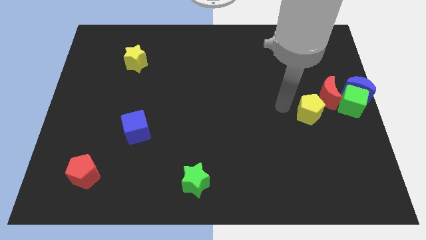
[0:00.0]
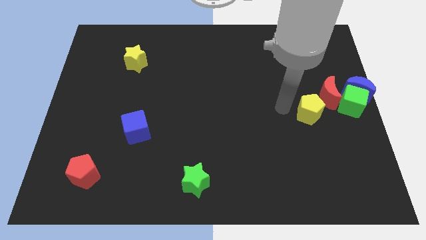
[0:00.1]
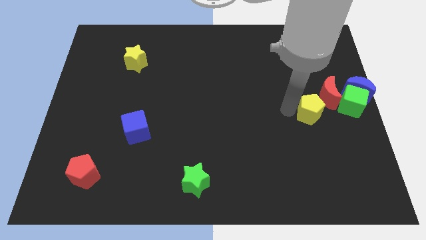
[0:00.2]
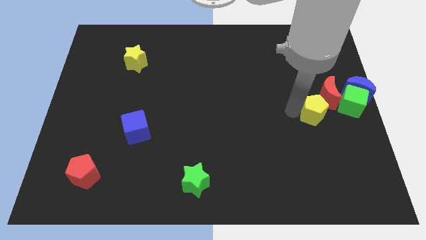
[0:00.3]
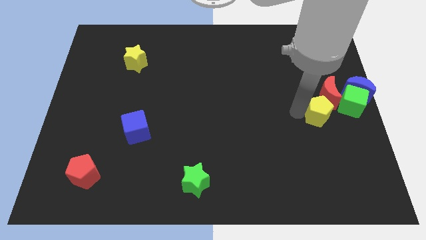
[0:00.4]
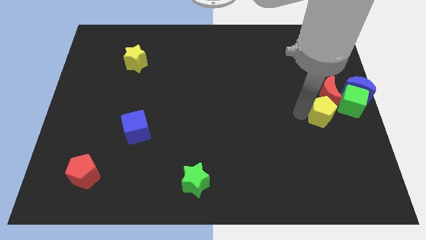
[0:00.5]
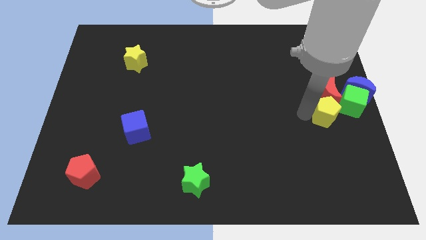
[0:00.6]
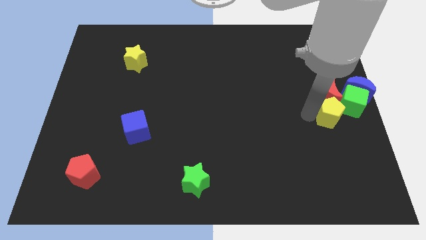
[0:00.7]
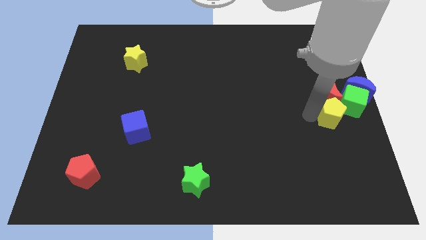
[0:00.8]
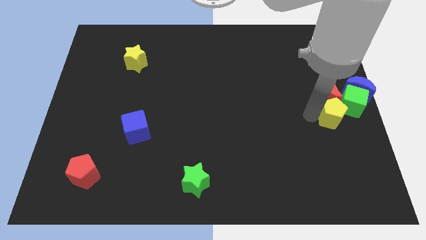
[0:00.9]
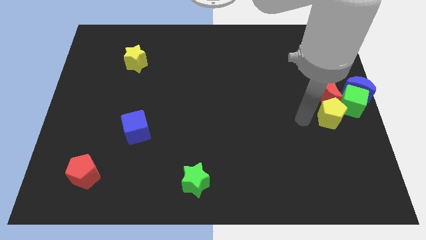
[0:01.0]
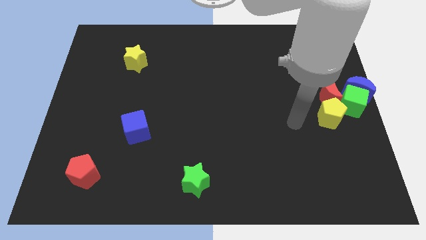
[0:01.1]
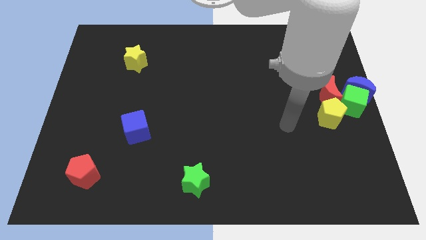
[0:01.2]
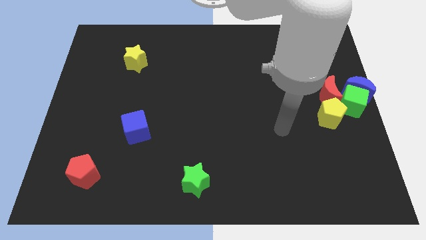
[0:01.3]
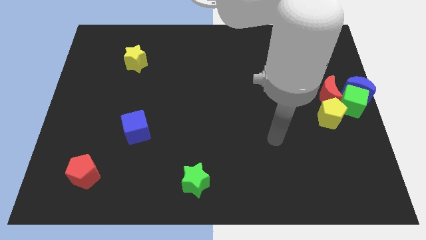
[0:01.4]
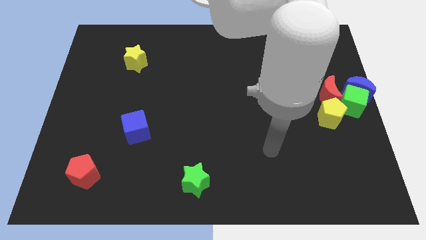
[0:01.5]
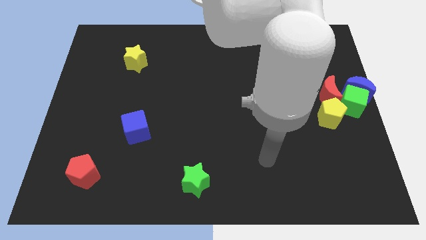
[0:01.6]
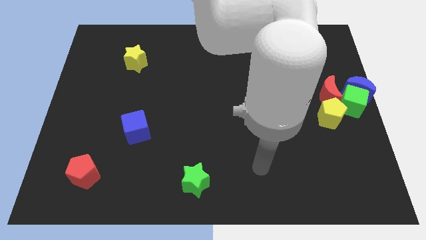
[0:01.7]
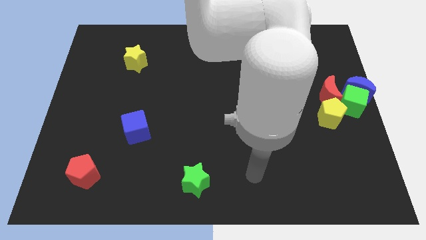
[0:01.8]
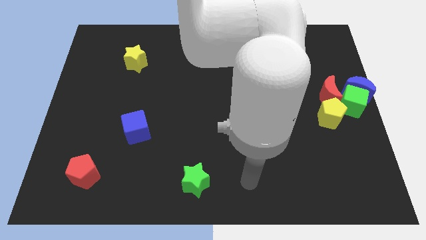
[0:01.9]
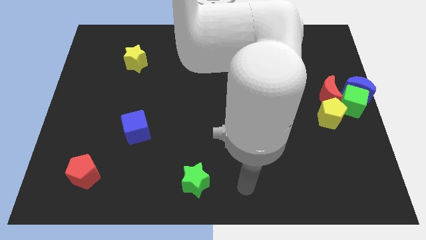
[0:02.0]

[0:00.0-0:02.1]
move the yellow pentagon to bottom left of green cube

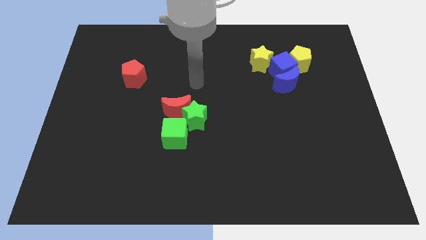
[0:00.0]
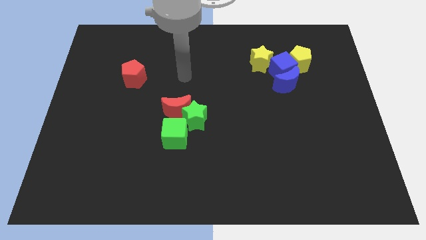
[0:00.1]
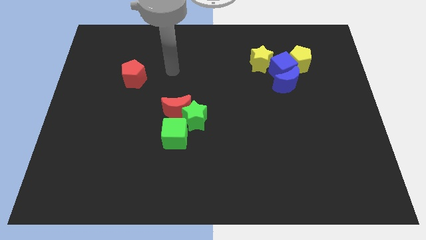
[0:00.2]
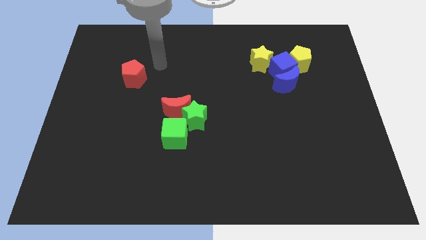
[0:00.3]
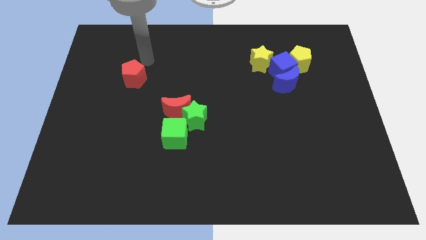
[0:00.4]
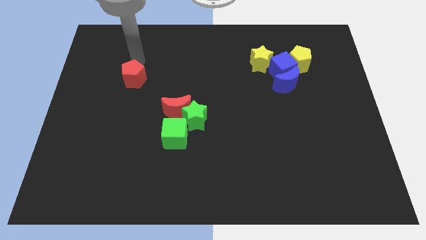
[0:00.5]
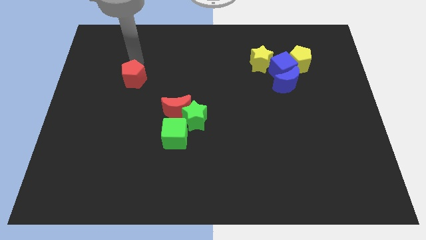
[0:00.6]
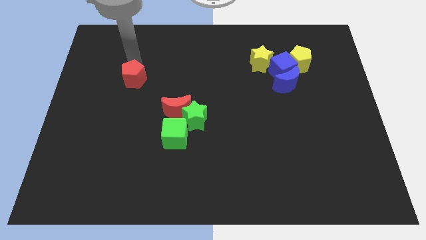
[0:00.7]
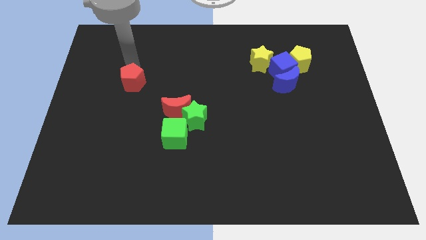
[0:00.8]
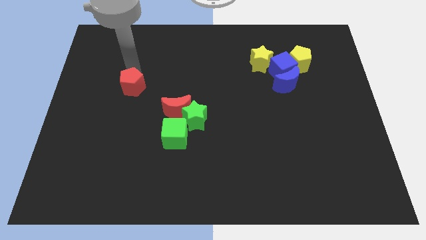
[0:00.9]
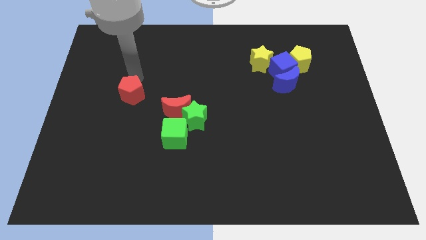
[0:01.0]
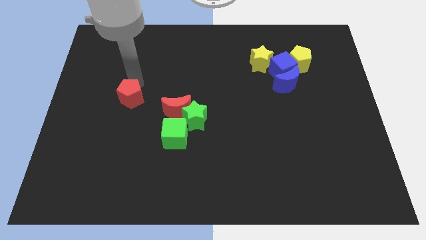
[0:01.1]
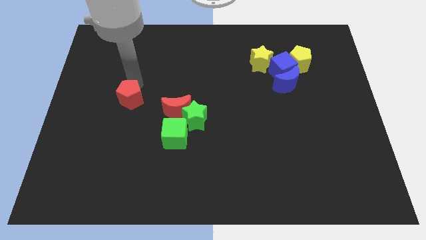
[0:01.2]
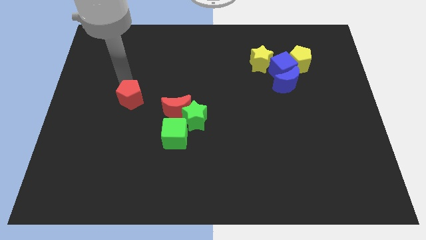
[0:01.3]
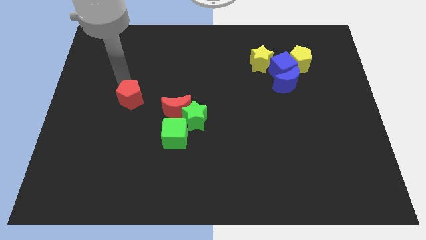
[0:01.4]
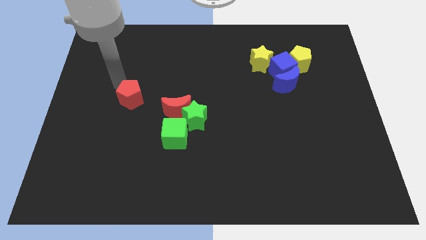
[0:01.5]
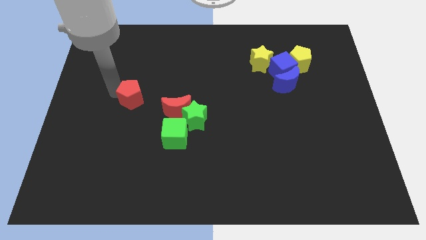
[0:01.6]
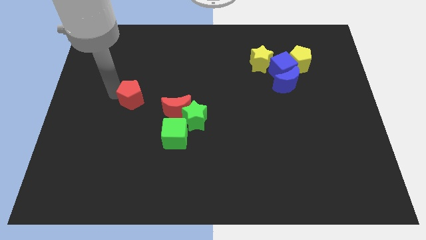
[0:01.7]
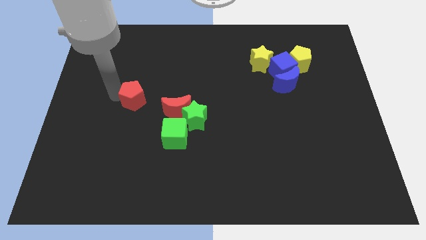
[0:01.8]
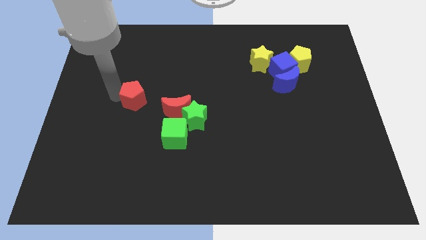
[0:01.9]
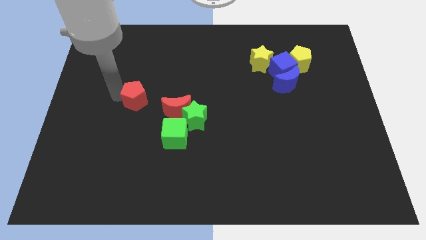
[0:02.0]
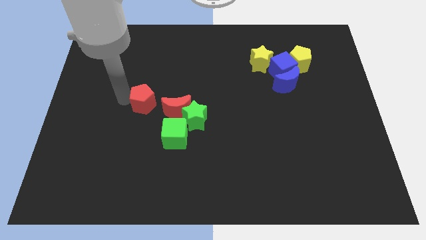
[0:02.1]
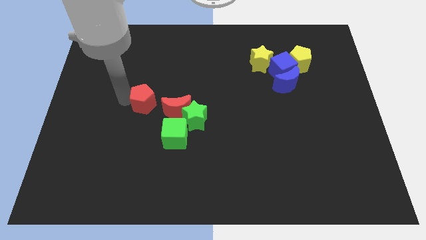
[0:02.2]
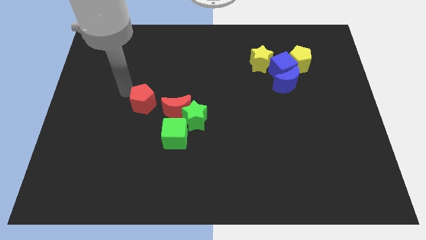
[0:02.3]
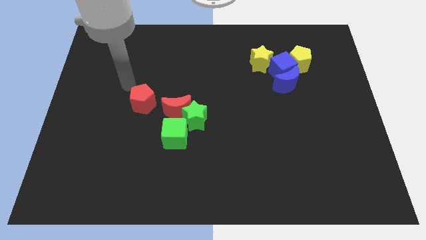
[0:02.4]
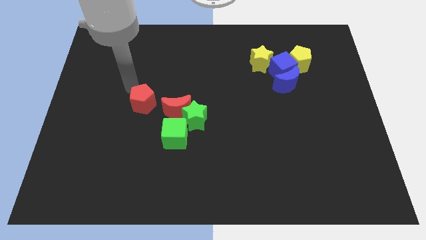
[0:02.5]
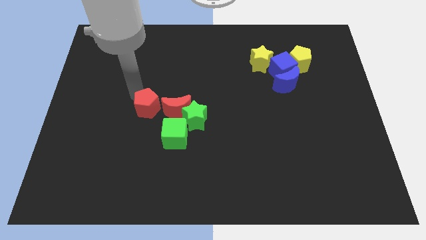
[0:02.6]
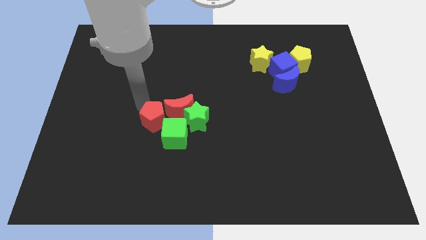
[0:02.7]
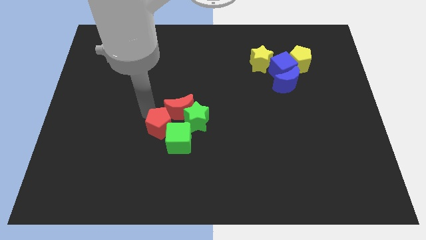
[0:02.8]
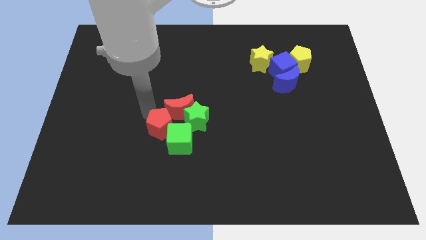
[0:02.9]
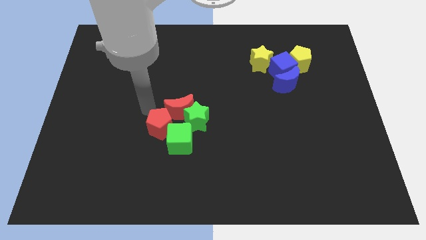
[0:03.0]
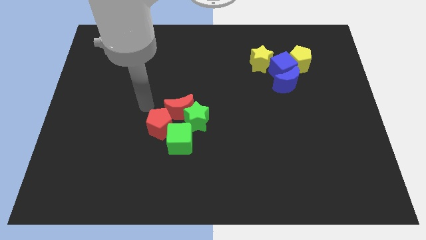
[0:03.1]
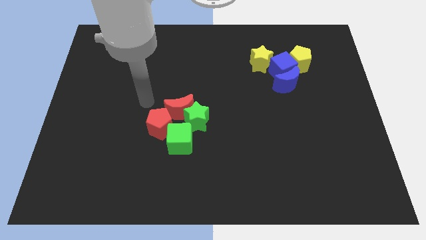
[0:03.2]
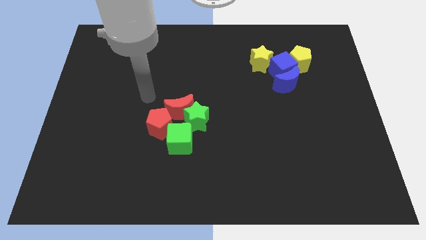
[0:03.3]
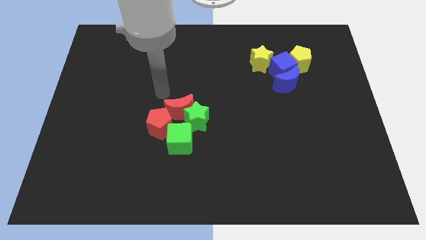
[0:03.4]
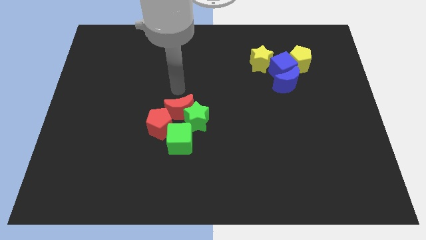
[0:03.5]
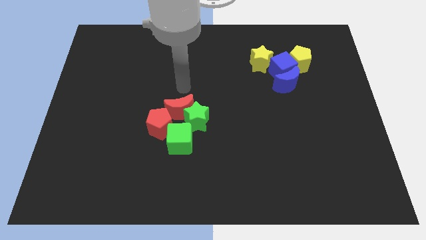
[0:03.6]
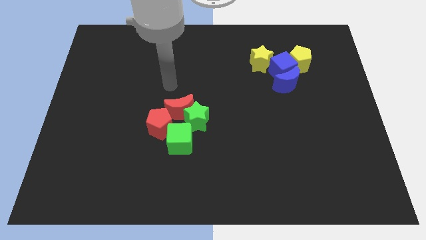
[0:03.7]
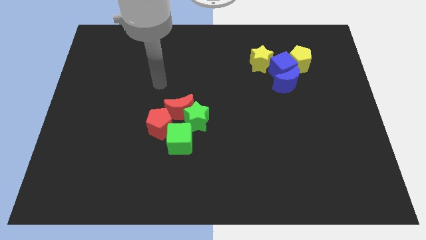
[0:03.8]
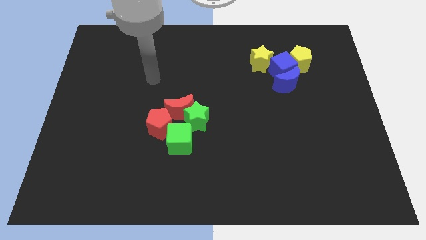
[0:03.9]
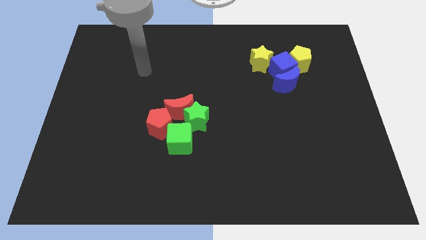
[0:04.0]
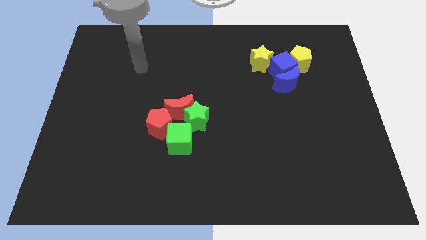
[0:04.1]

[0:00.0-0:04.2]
push the red pentagon into the left of the green cube and red pentagon

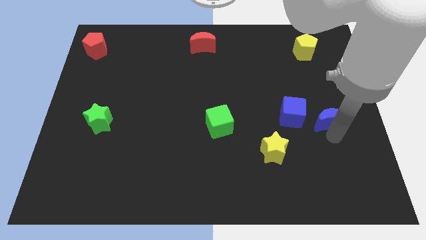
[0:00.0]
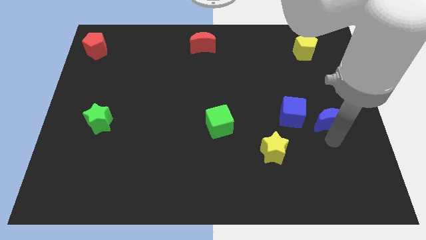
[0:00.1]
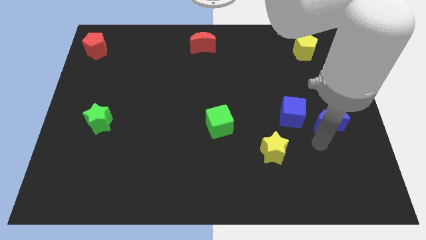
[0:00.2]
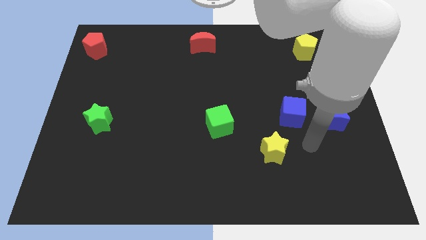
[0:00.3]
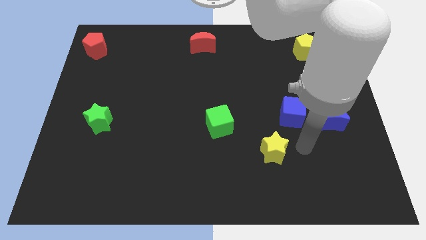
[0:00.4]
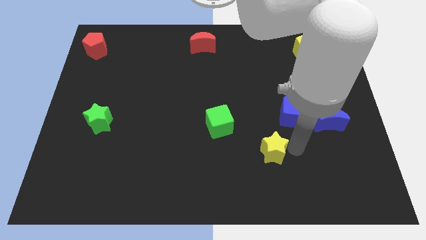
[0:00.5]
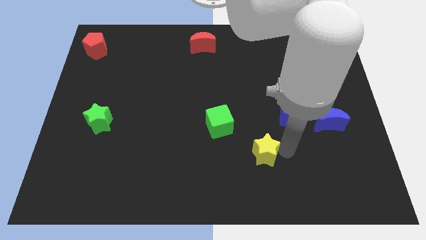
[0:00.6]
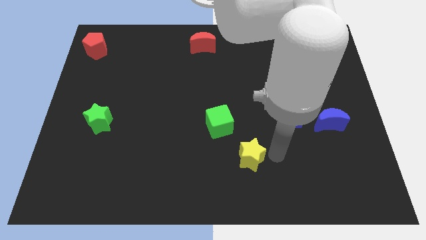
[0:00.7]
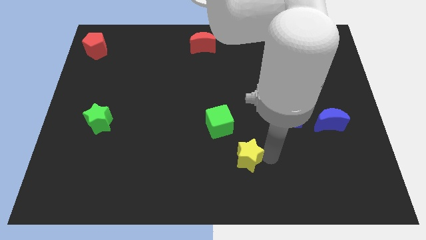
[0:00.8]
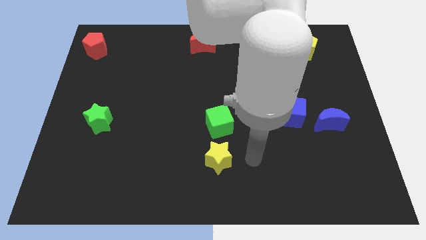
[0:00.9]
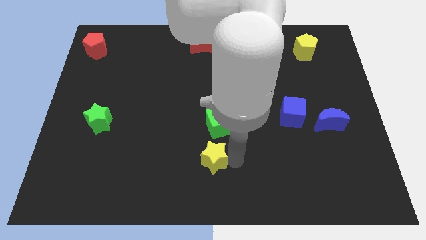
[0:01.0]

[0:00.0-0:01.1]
push the yellow star to the bottom of the green cube

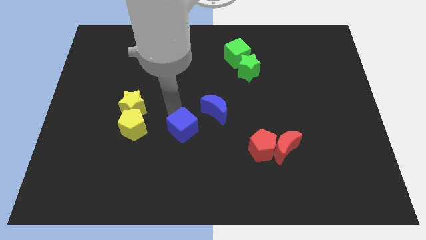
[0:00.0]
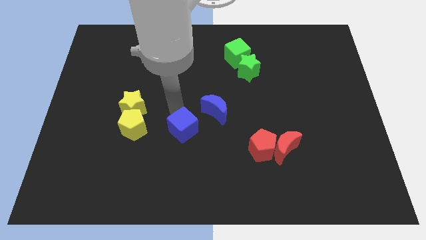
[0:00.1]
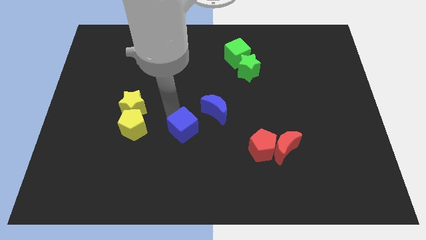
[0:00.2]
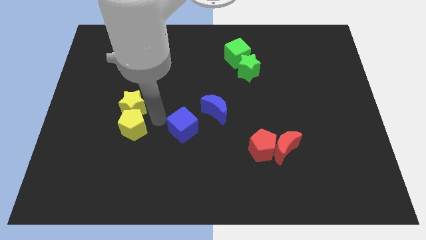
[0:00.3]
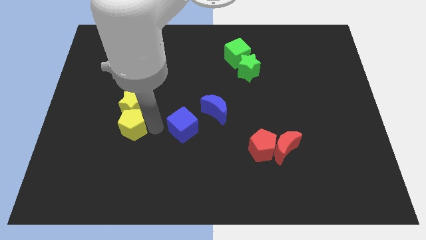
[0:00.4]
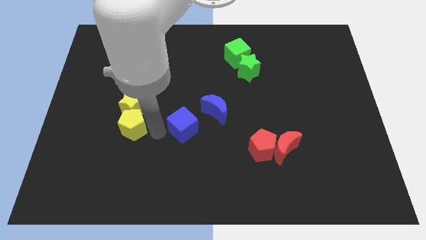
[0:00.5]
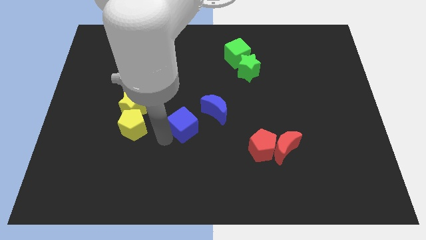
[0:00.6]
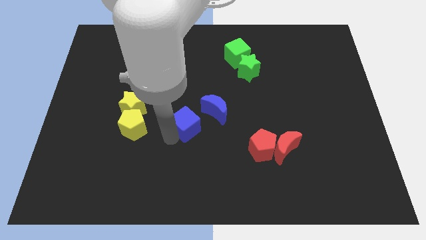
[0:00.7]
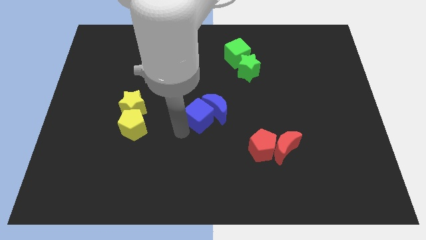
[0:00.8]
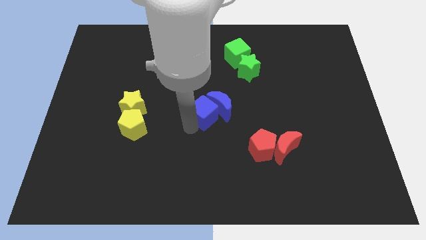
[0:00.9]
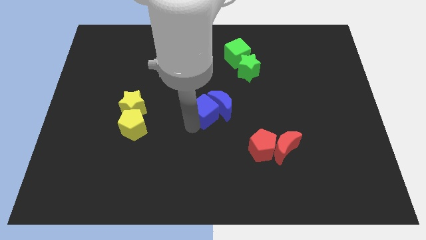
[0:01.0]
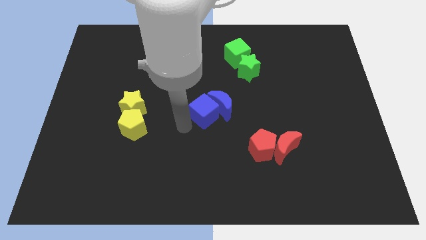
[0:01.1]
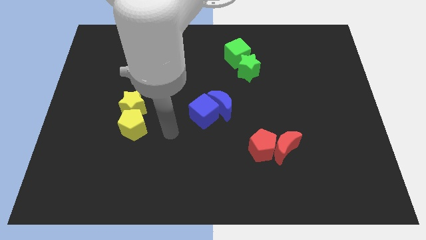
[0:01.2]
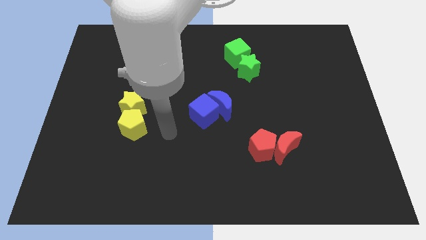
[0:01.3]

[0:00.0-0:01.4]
move the blue cube into the blue moon

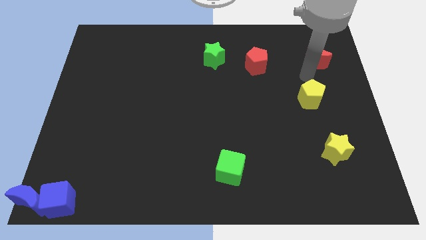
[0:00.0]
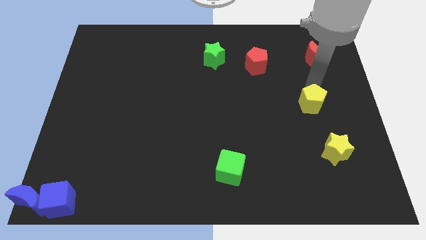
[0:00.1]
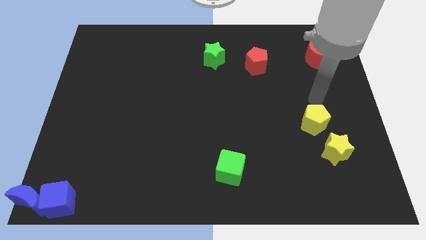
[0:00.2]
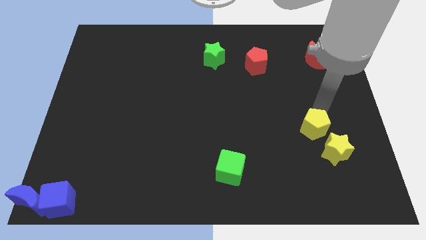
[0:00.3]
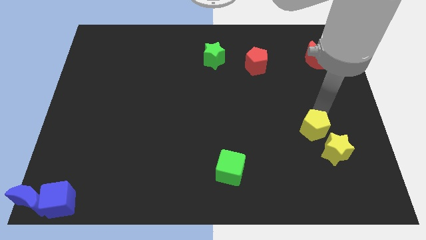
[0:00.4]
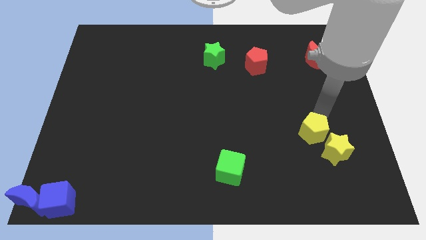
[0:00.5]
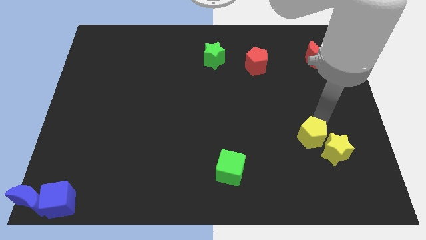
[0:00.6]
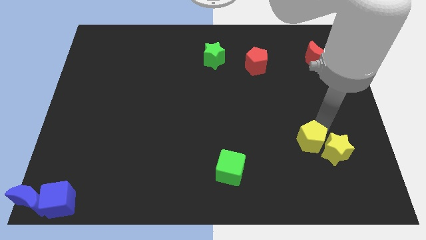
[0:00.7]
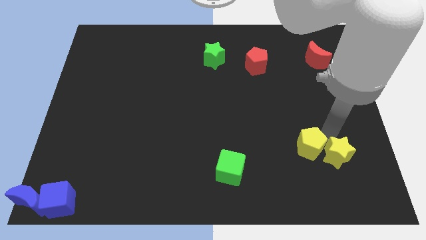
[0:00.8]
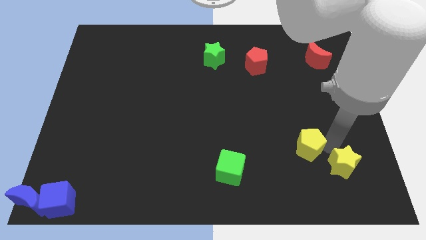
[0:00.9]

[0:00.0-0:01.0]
push the yellow pentagon into the yellow star
